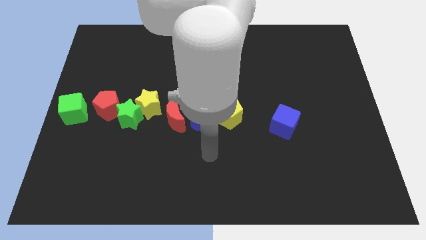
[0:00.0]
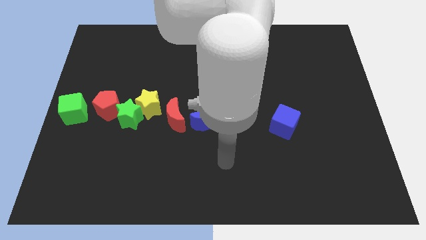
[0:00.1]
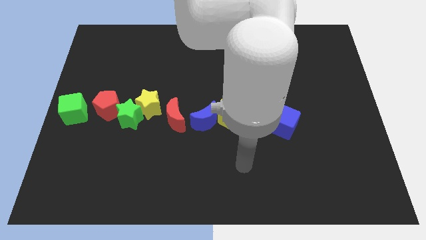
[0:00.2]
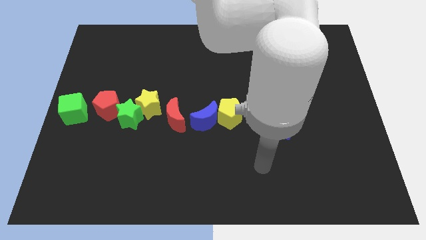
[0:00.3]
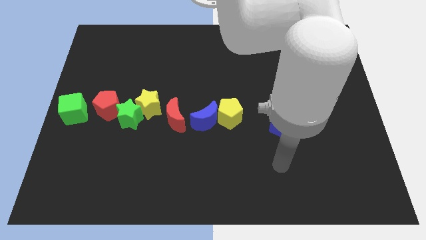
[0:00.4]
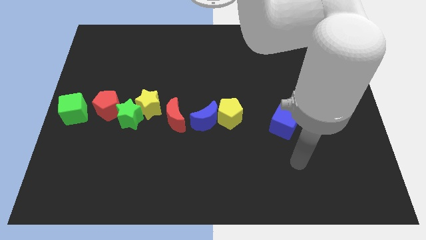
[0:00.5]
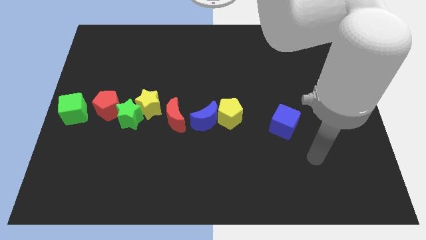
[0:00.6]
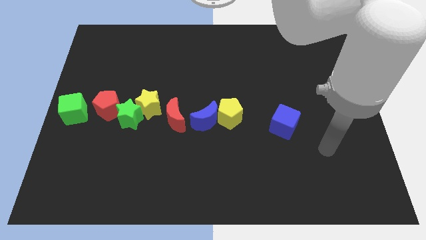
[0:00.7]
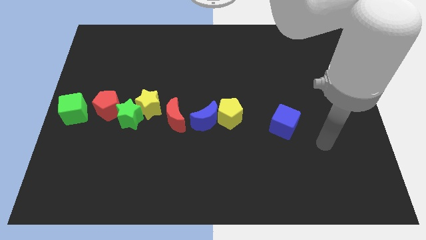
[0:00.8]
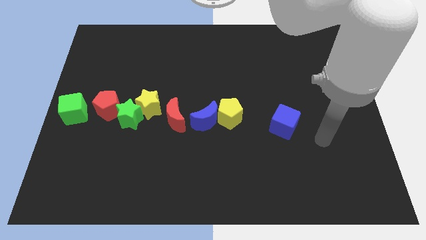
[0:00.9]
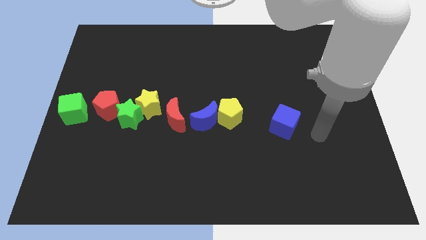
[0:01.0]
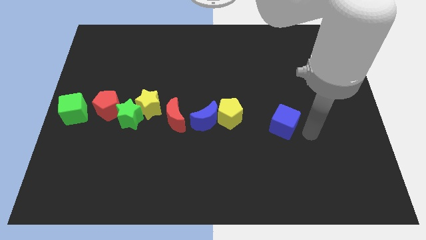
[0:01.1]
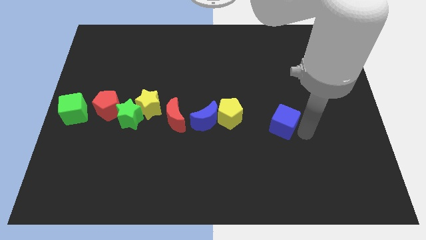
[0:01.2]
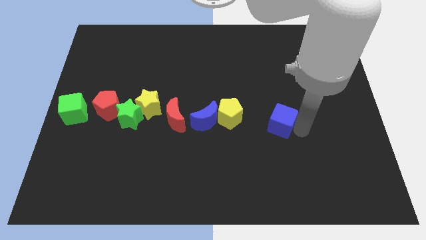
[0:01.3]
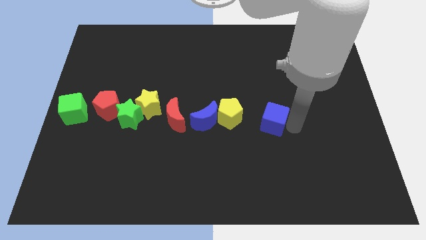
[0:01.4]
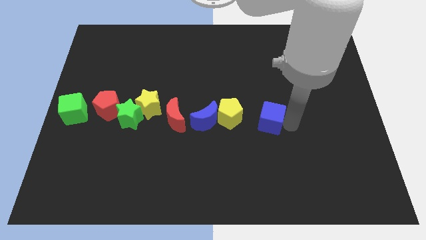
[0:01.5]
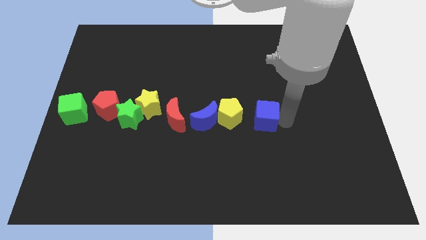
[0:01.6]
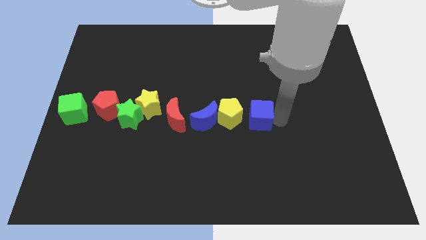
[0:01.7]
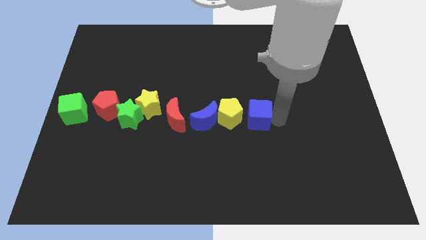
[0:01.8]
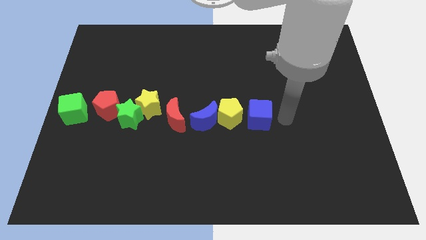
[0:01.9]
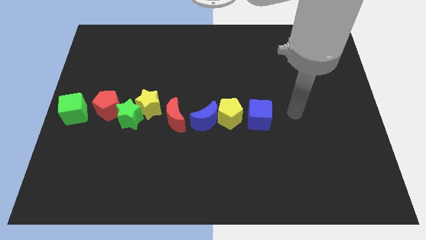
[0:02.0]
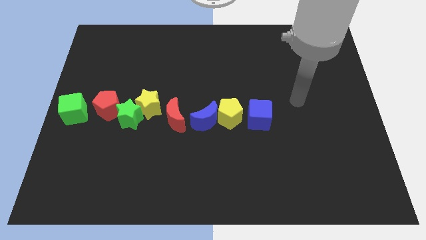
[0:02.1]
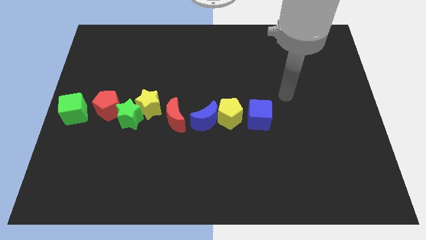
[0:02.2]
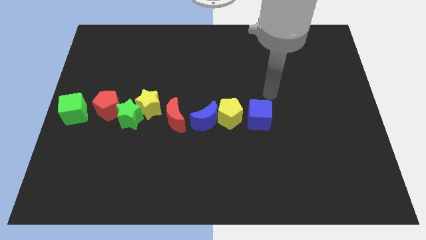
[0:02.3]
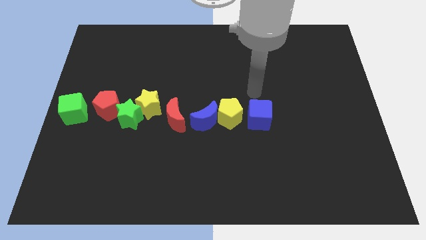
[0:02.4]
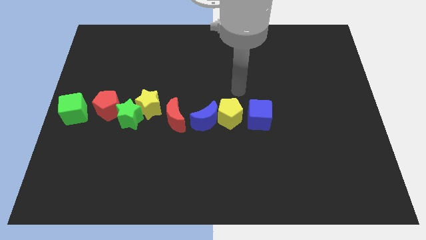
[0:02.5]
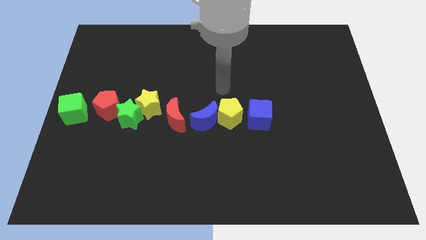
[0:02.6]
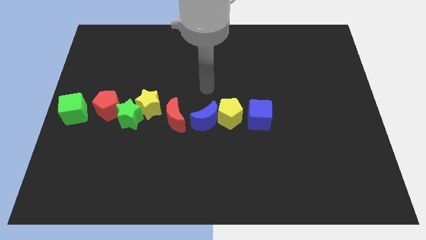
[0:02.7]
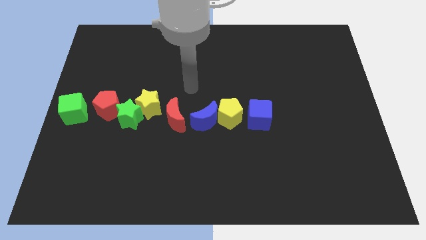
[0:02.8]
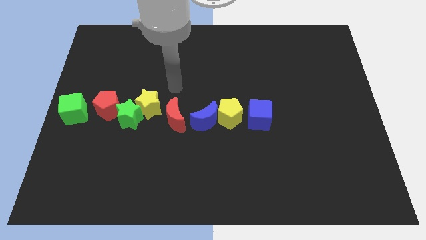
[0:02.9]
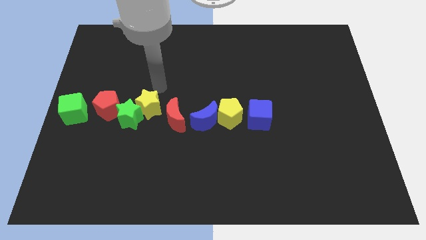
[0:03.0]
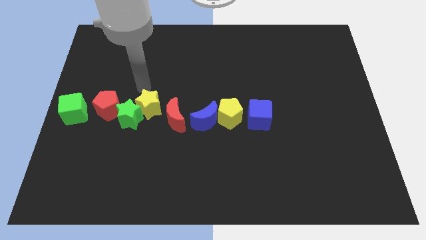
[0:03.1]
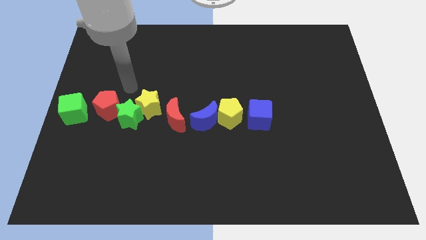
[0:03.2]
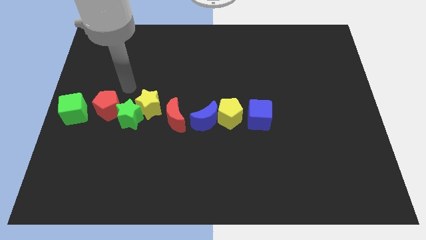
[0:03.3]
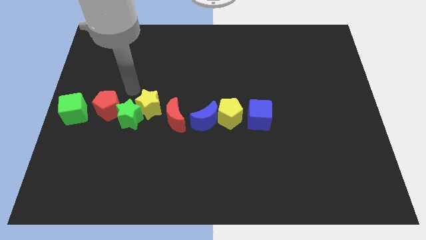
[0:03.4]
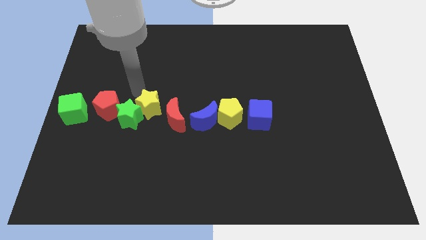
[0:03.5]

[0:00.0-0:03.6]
place the blue cube to the right of the yellow pentagon

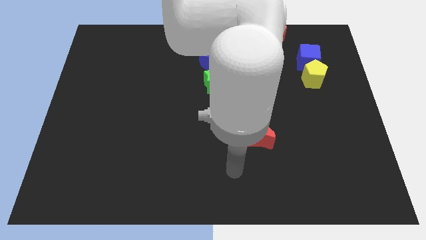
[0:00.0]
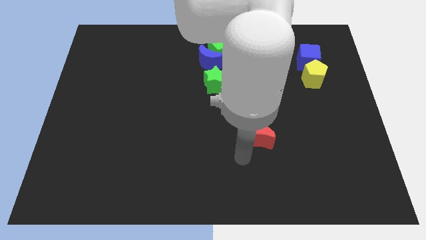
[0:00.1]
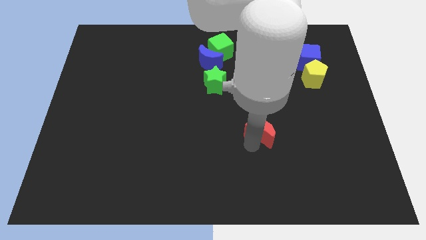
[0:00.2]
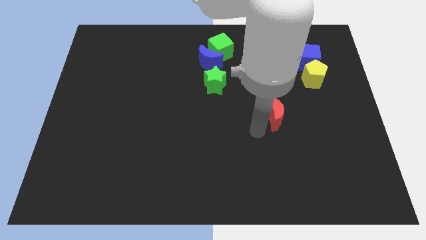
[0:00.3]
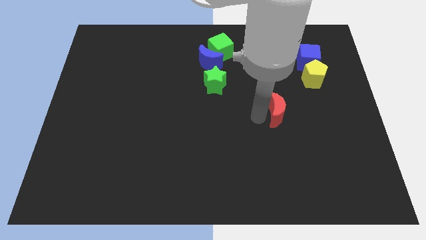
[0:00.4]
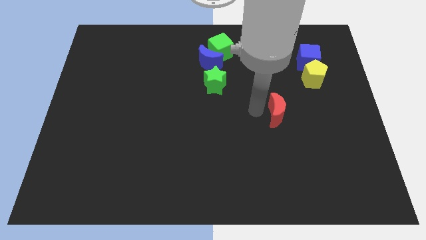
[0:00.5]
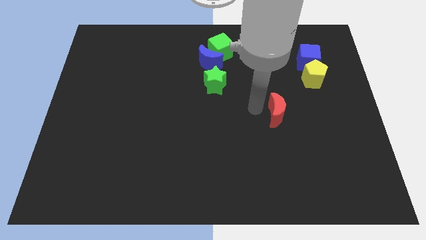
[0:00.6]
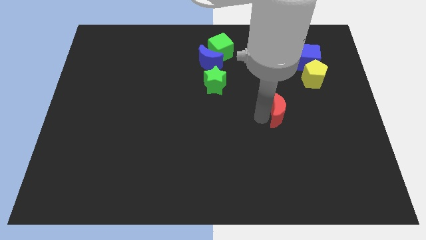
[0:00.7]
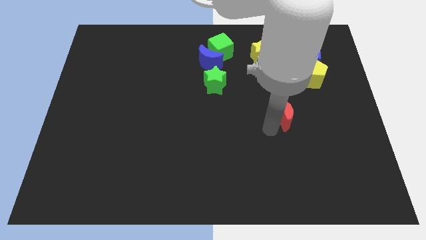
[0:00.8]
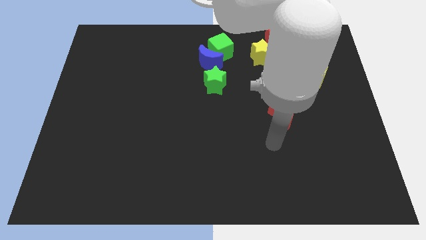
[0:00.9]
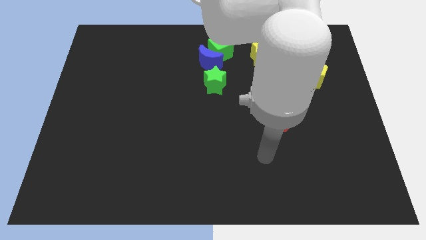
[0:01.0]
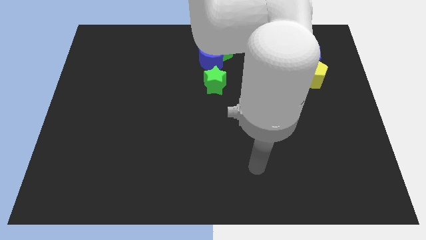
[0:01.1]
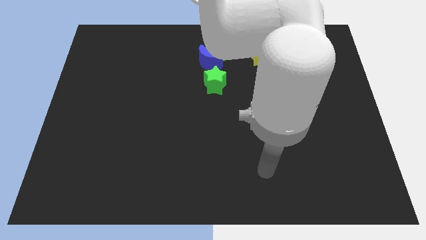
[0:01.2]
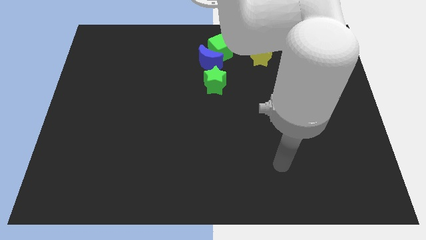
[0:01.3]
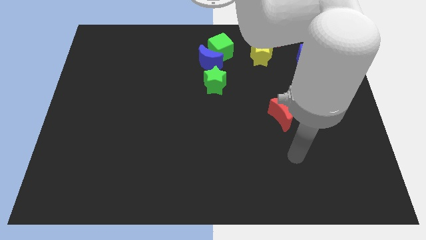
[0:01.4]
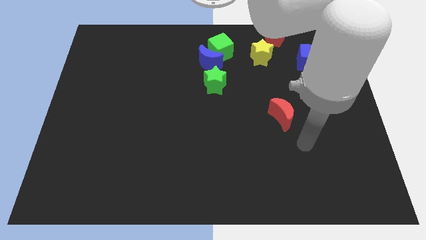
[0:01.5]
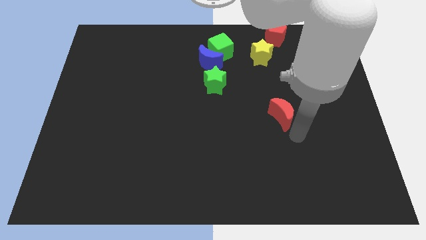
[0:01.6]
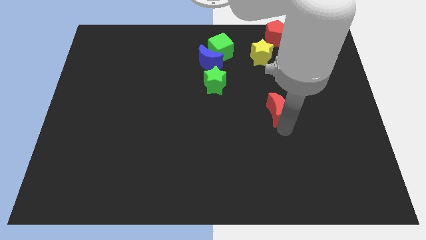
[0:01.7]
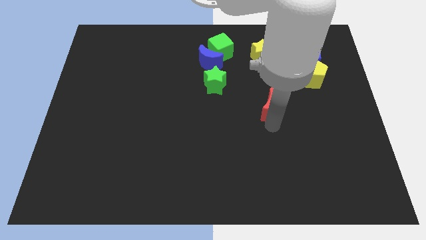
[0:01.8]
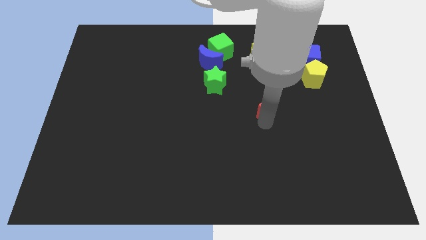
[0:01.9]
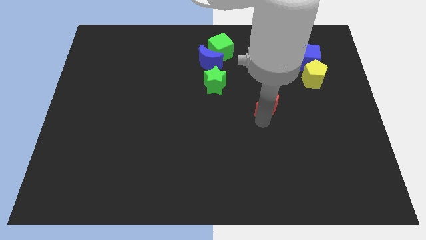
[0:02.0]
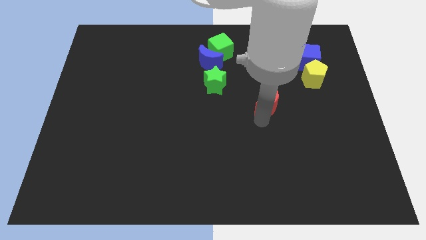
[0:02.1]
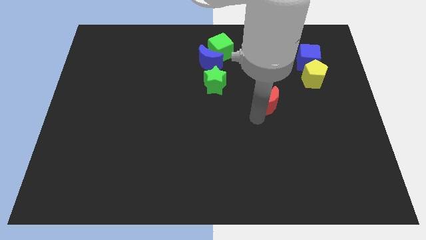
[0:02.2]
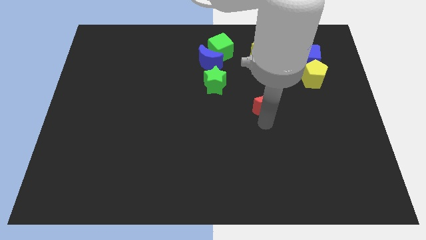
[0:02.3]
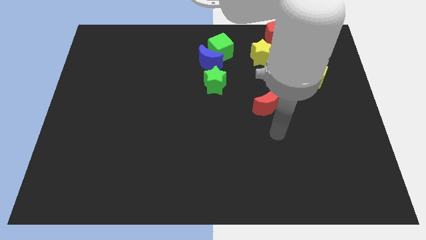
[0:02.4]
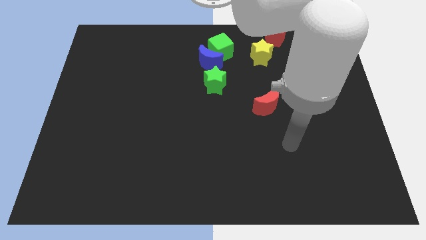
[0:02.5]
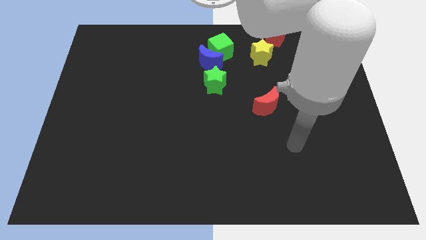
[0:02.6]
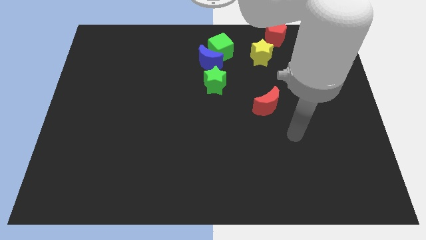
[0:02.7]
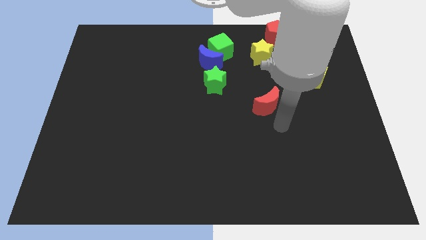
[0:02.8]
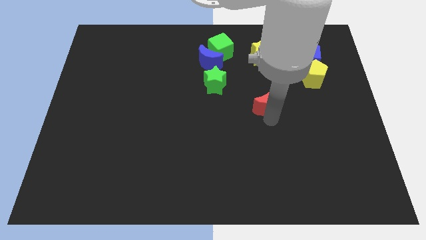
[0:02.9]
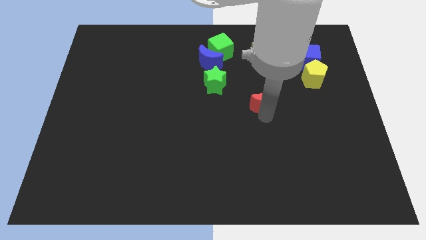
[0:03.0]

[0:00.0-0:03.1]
move red moon upwards vertical to yellow star

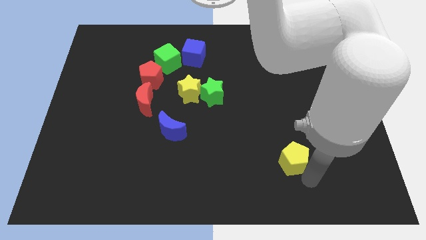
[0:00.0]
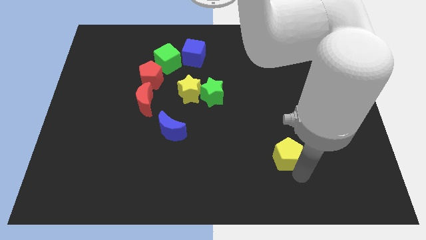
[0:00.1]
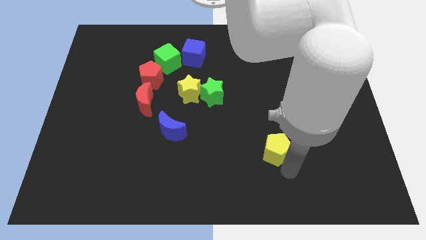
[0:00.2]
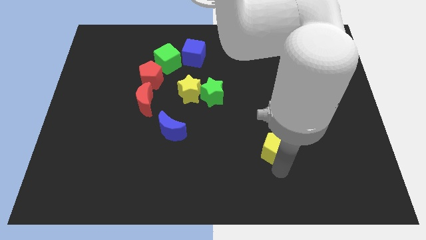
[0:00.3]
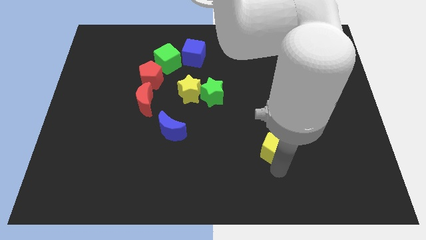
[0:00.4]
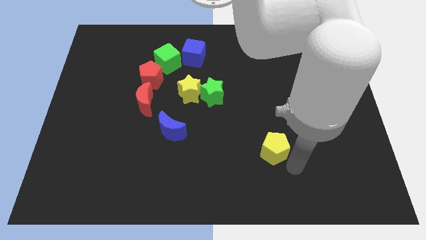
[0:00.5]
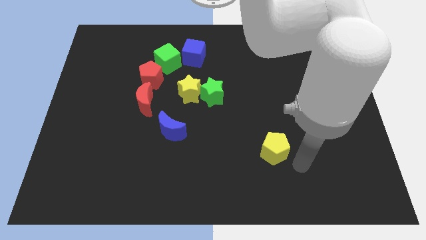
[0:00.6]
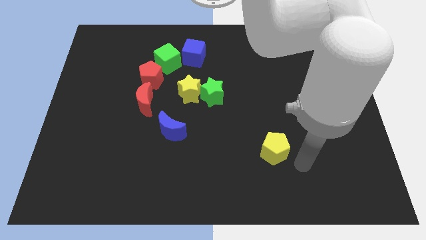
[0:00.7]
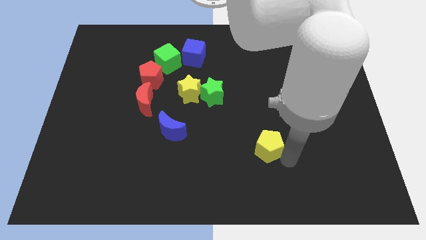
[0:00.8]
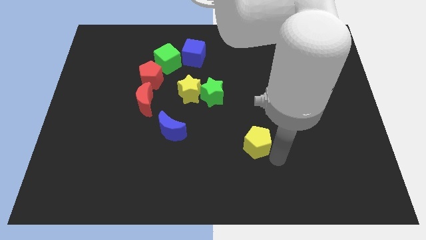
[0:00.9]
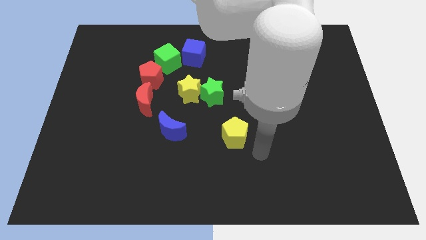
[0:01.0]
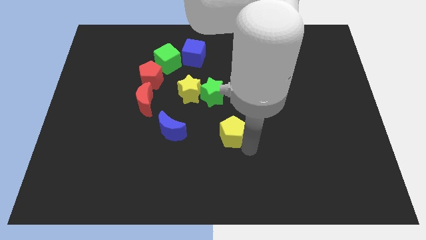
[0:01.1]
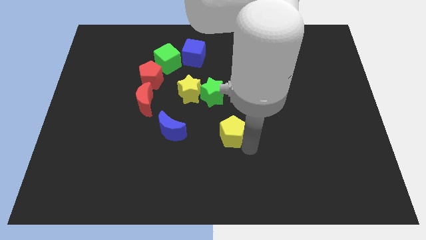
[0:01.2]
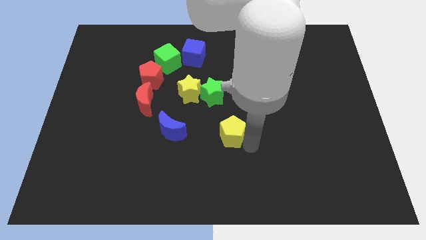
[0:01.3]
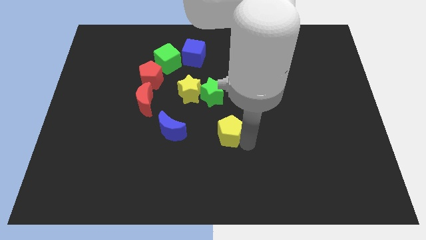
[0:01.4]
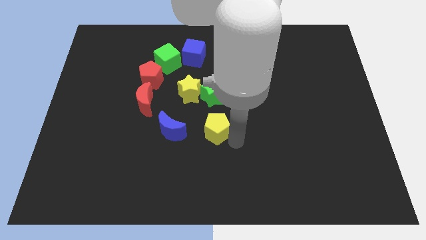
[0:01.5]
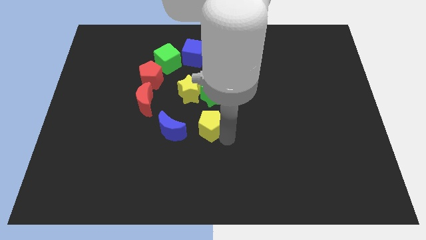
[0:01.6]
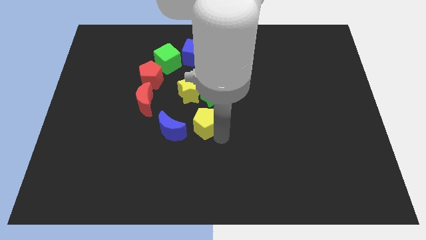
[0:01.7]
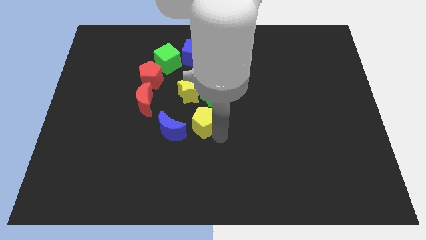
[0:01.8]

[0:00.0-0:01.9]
place the yellow pentagon below the green star

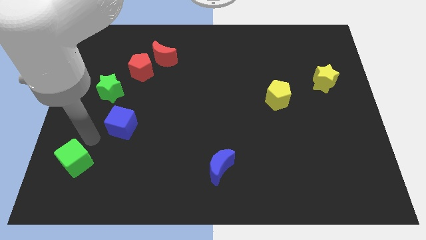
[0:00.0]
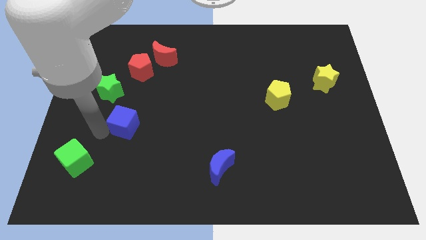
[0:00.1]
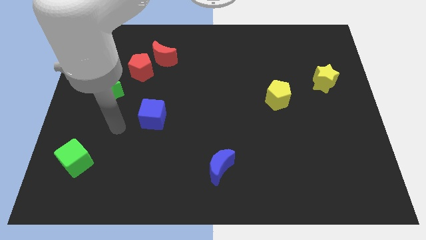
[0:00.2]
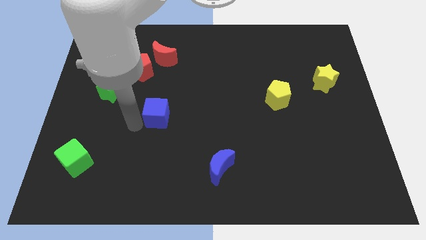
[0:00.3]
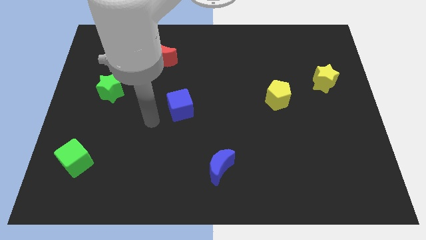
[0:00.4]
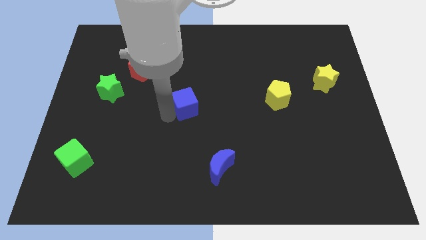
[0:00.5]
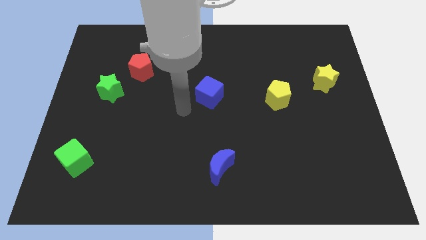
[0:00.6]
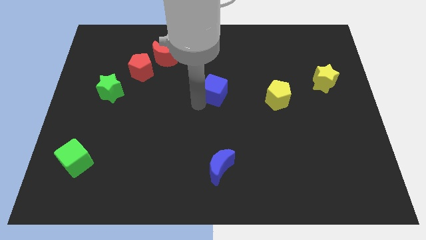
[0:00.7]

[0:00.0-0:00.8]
push the blue cube at the top side of the blue crescent
